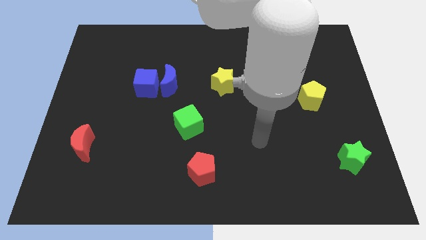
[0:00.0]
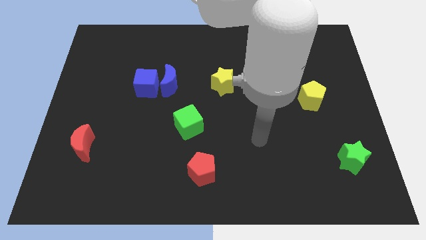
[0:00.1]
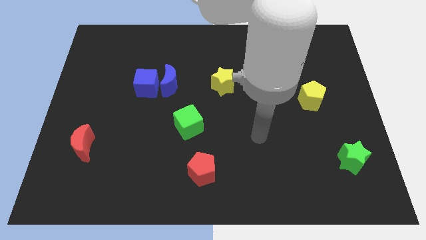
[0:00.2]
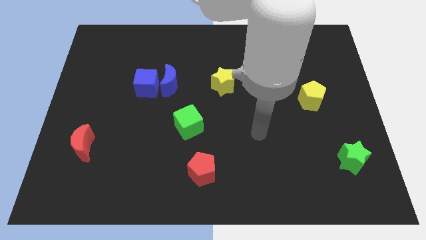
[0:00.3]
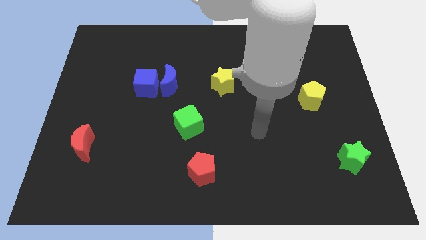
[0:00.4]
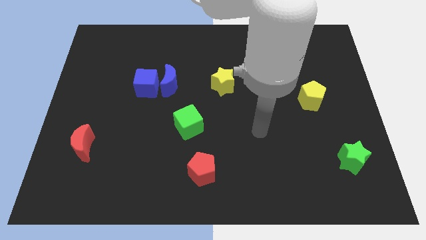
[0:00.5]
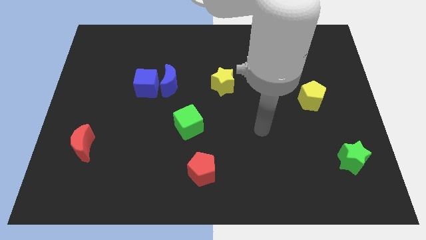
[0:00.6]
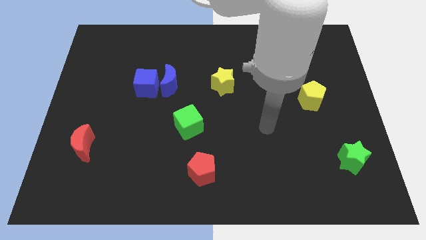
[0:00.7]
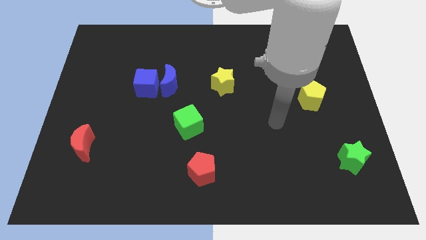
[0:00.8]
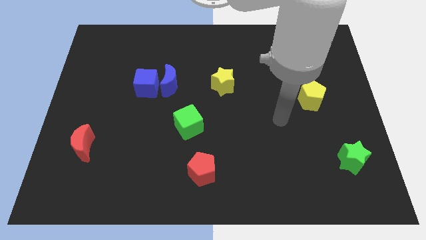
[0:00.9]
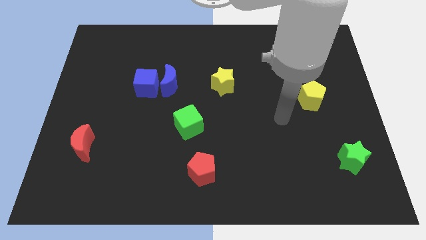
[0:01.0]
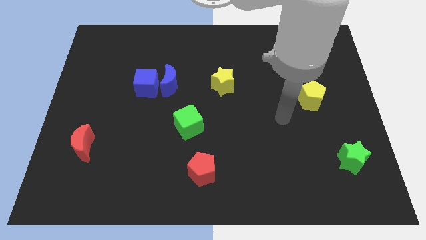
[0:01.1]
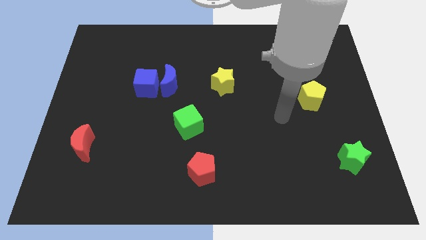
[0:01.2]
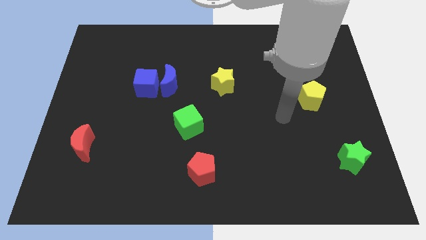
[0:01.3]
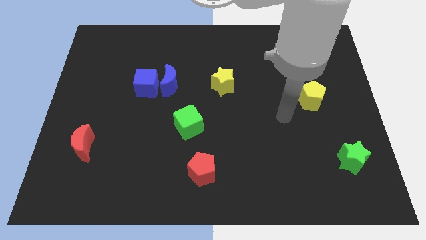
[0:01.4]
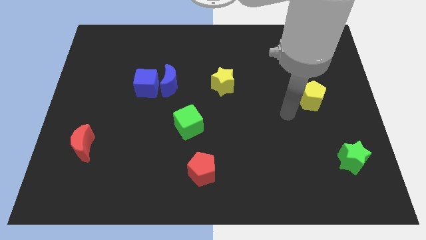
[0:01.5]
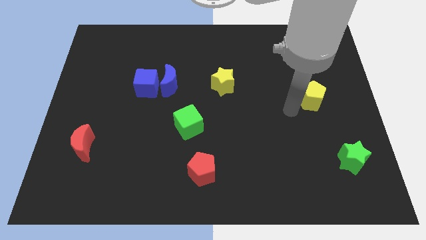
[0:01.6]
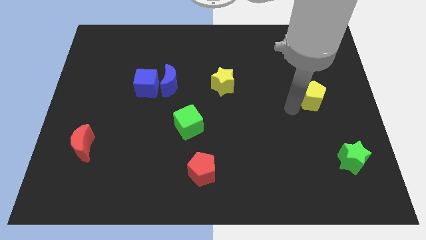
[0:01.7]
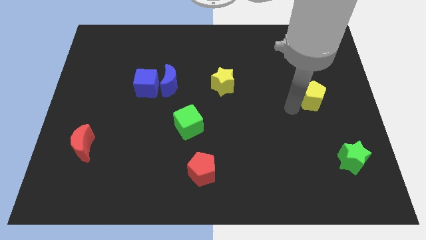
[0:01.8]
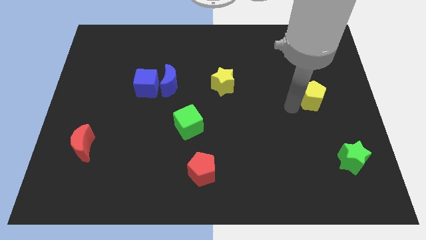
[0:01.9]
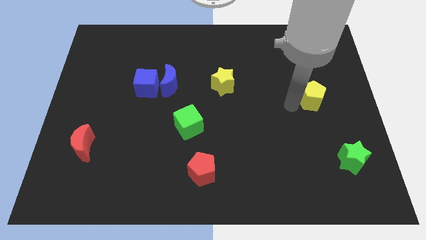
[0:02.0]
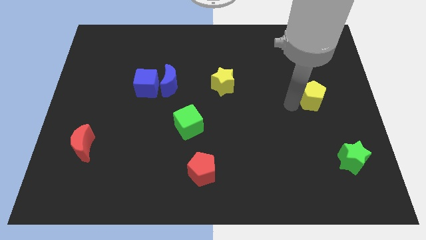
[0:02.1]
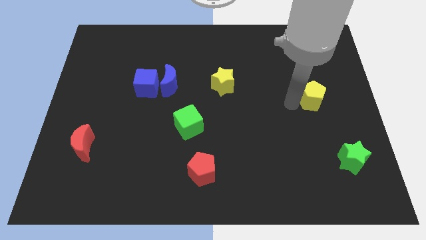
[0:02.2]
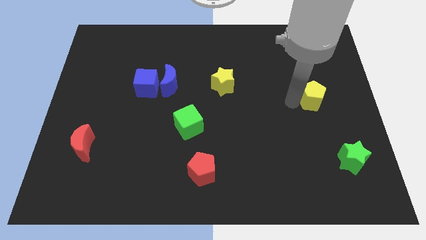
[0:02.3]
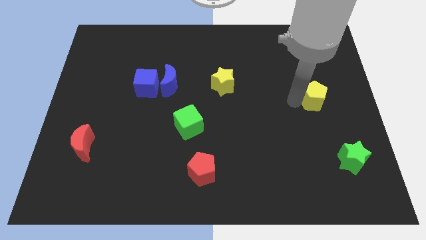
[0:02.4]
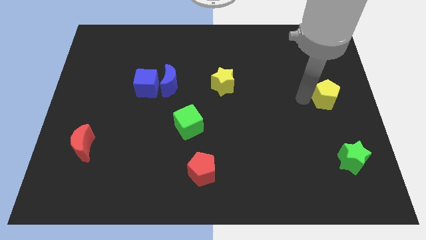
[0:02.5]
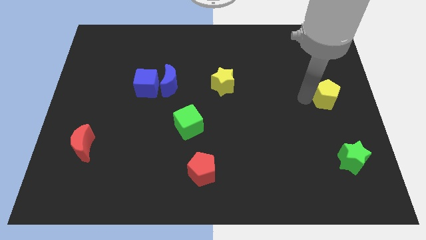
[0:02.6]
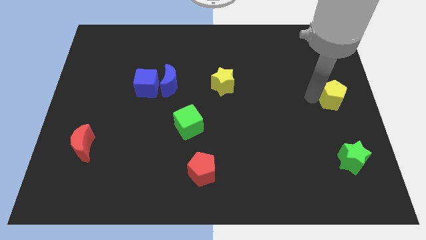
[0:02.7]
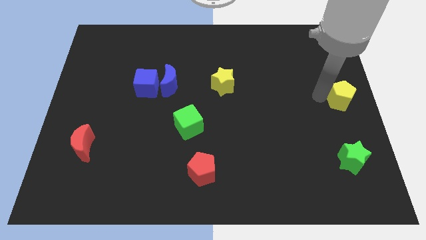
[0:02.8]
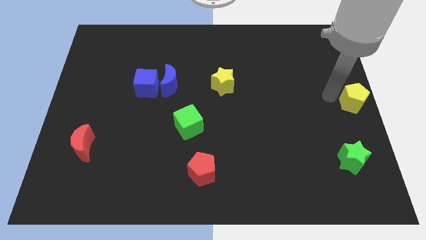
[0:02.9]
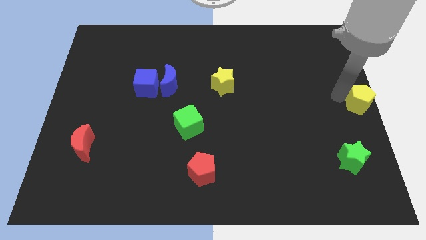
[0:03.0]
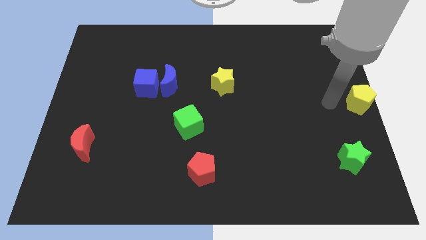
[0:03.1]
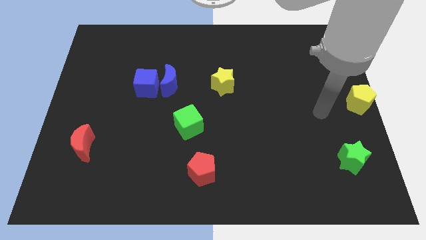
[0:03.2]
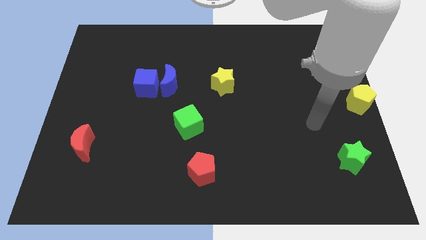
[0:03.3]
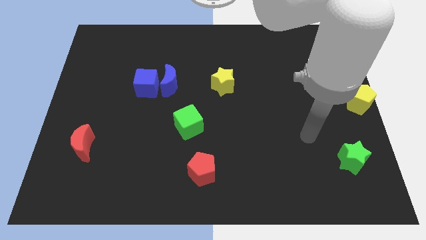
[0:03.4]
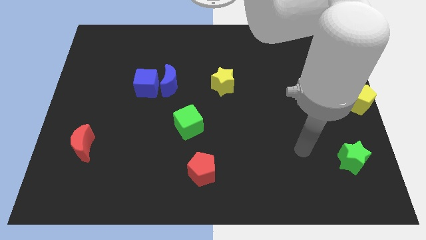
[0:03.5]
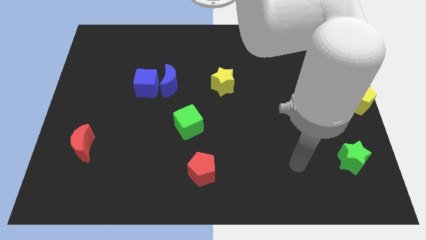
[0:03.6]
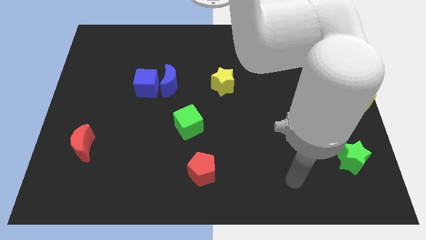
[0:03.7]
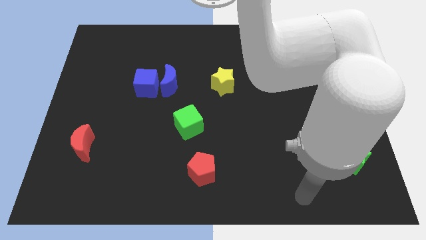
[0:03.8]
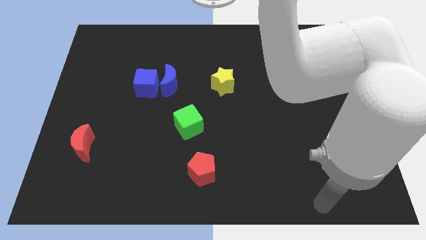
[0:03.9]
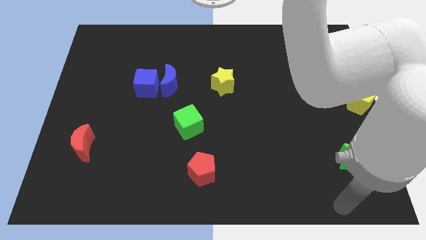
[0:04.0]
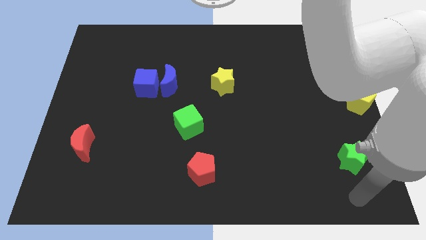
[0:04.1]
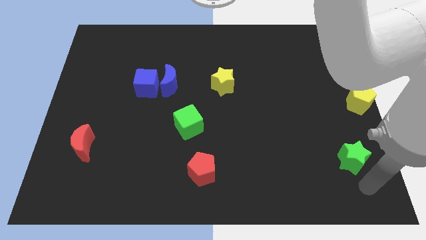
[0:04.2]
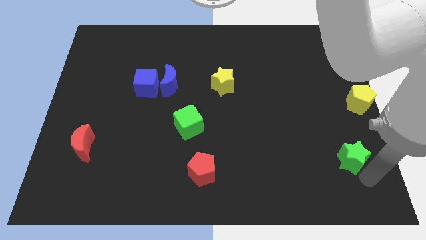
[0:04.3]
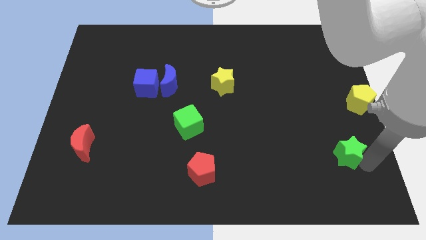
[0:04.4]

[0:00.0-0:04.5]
move the yellow pentagon to the center right

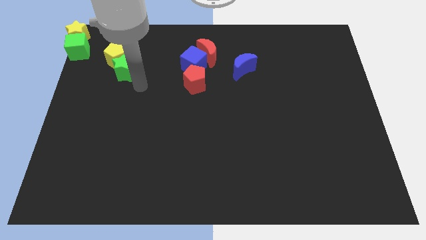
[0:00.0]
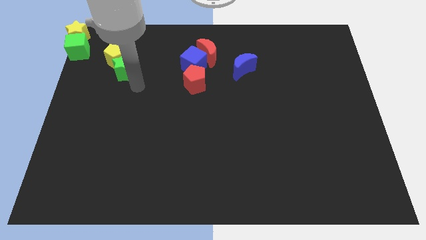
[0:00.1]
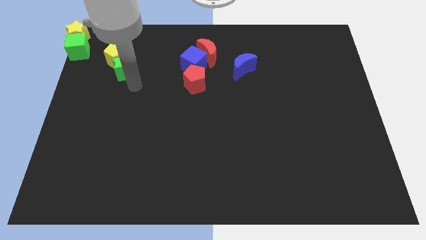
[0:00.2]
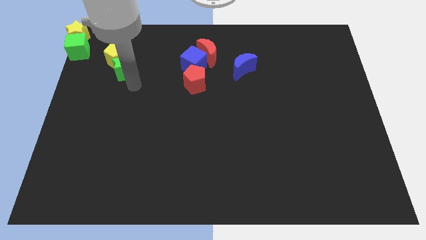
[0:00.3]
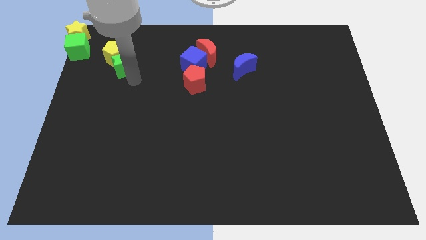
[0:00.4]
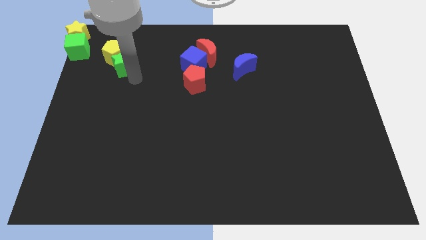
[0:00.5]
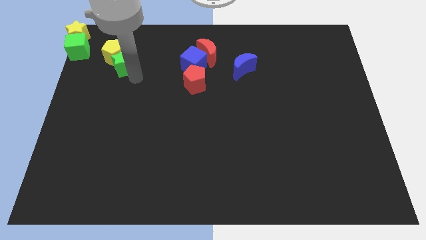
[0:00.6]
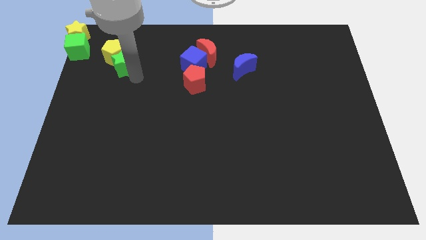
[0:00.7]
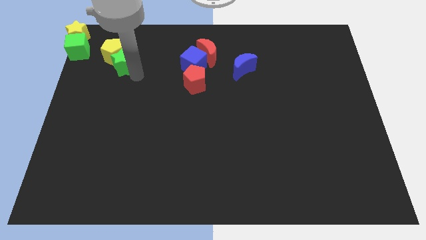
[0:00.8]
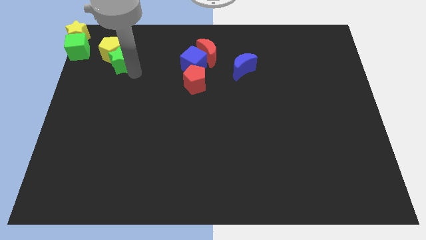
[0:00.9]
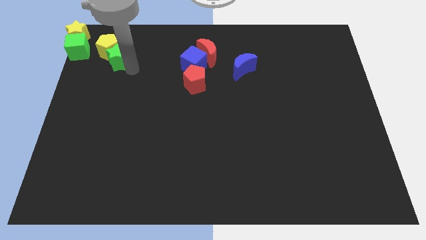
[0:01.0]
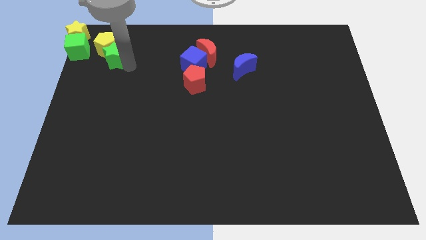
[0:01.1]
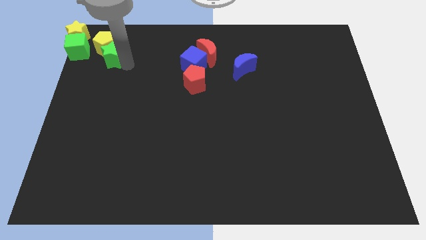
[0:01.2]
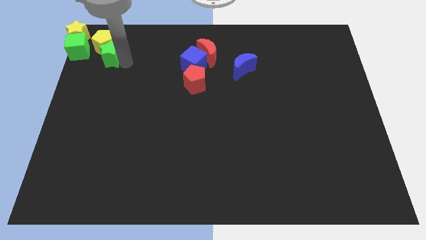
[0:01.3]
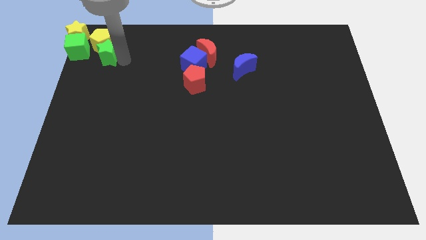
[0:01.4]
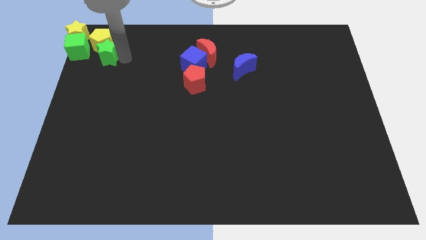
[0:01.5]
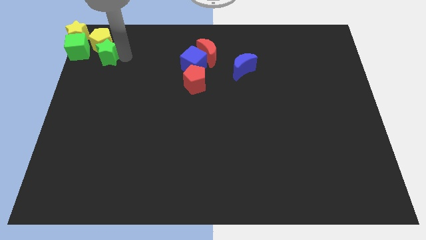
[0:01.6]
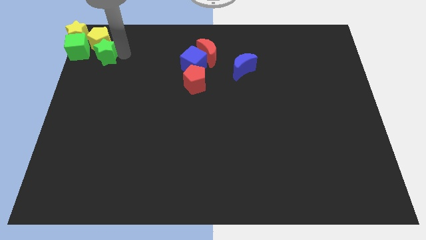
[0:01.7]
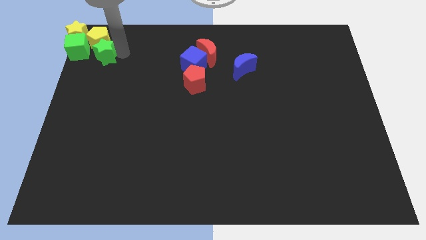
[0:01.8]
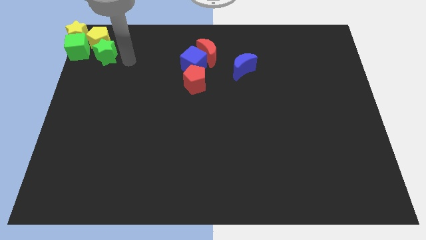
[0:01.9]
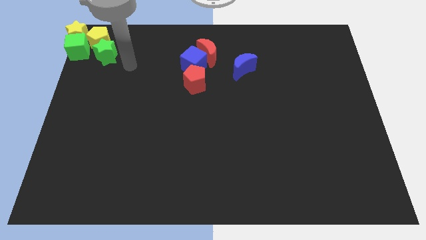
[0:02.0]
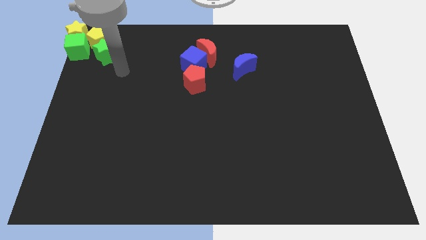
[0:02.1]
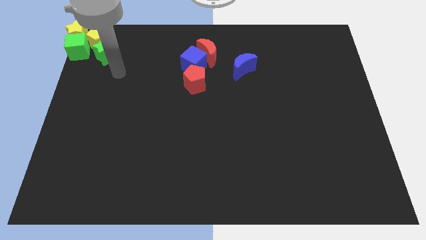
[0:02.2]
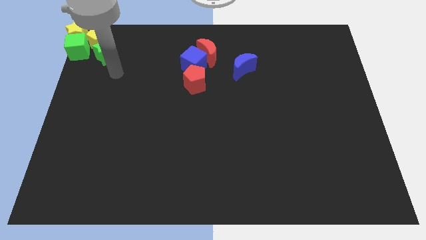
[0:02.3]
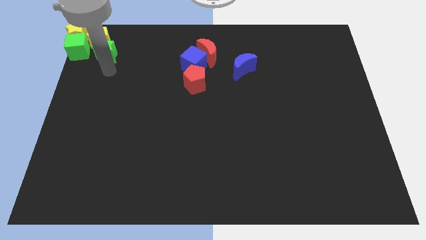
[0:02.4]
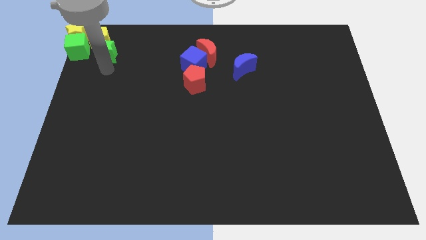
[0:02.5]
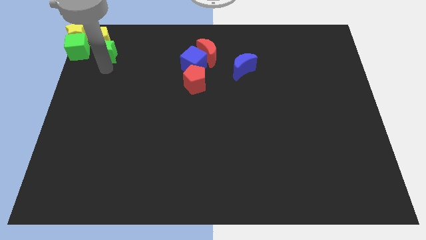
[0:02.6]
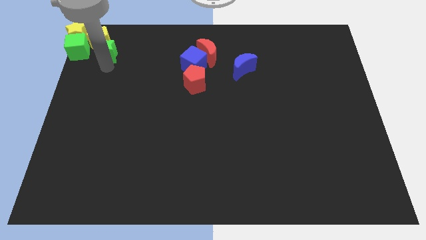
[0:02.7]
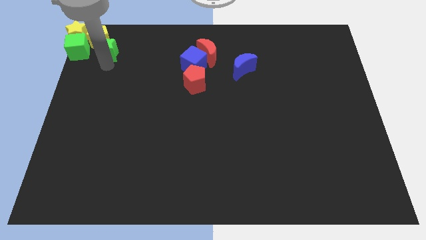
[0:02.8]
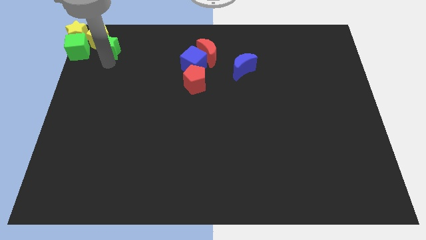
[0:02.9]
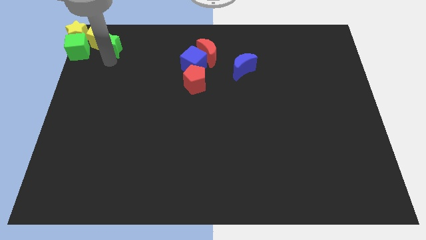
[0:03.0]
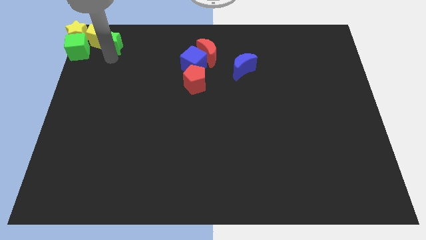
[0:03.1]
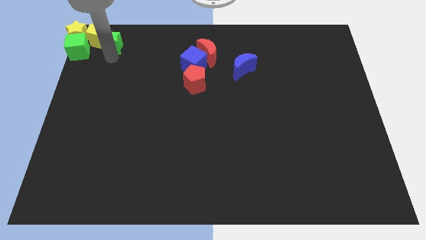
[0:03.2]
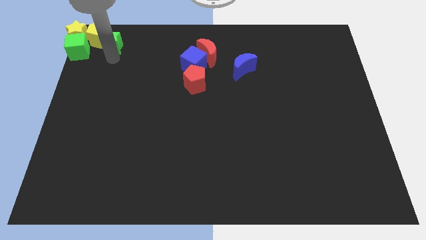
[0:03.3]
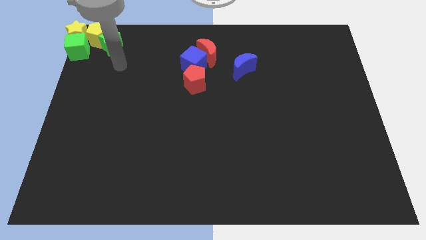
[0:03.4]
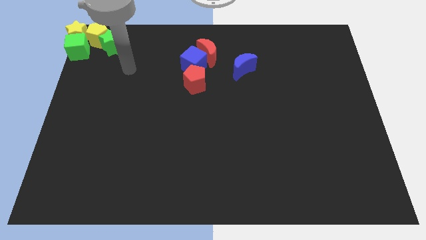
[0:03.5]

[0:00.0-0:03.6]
place yellow pentagon beside yellow star

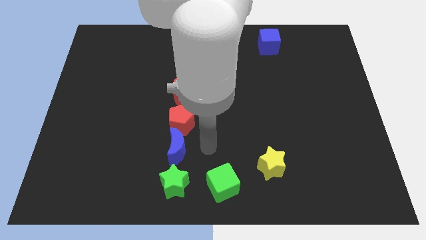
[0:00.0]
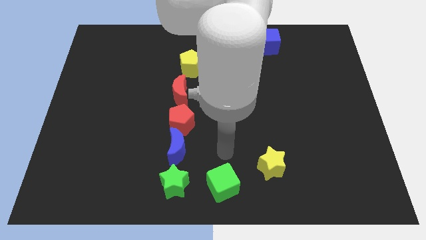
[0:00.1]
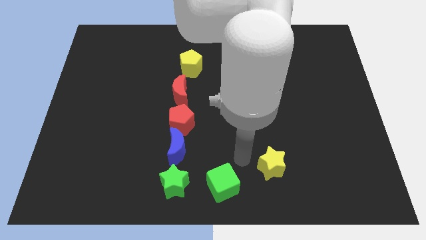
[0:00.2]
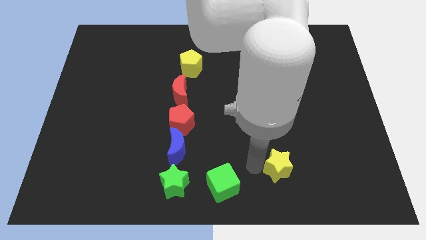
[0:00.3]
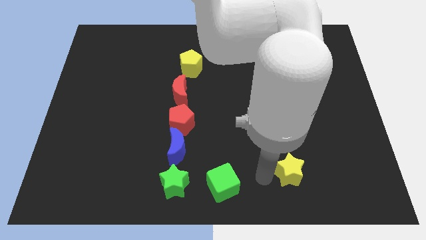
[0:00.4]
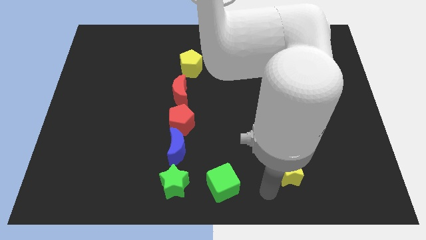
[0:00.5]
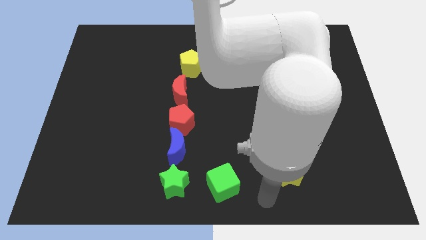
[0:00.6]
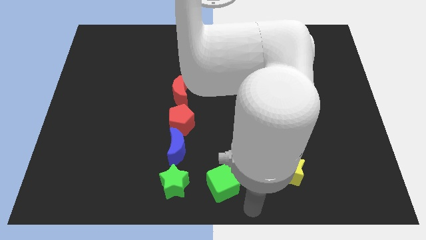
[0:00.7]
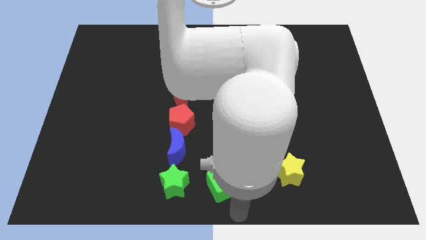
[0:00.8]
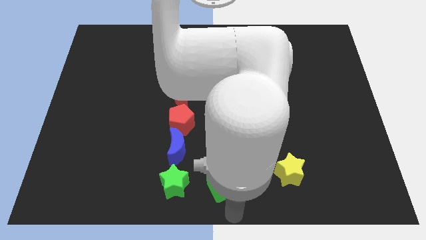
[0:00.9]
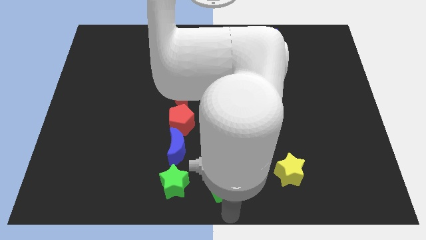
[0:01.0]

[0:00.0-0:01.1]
move your arm to the bottom side of the green cube
